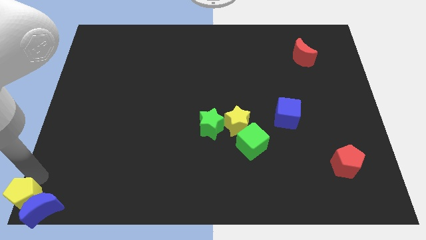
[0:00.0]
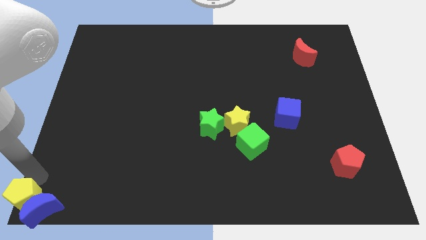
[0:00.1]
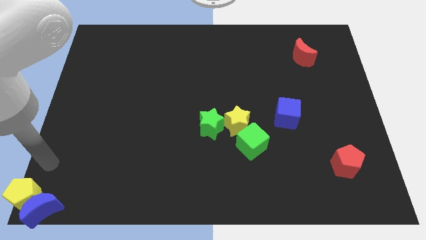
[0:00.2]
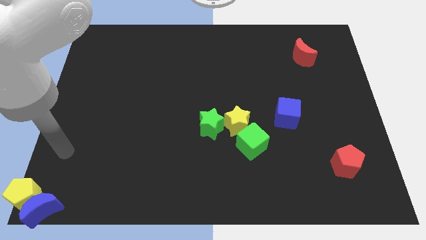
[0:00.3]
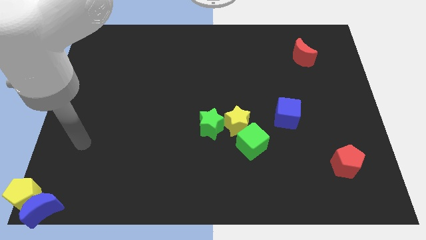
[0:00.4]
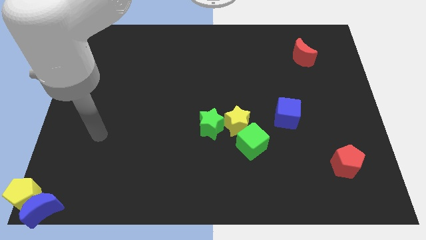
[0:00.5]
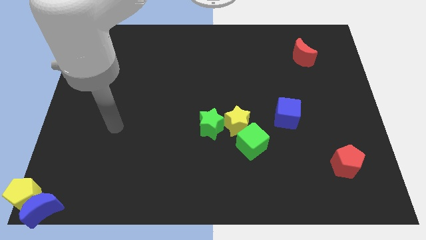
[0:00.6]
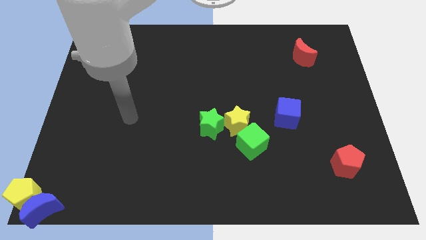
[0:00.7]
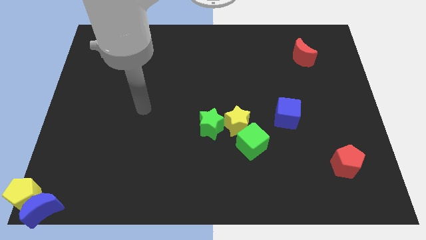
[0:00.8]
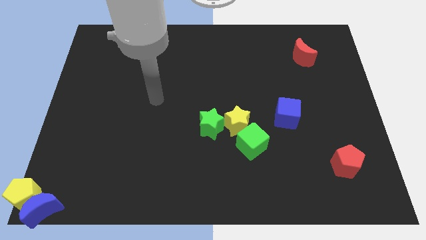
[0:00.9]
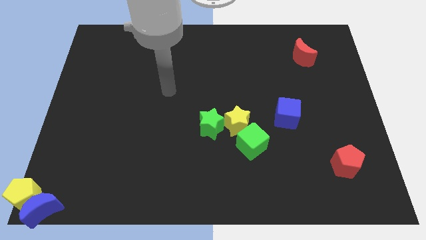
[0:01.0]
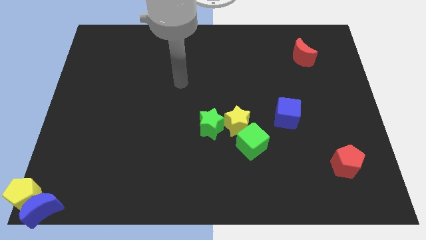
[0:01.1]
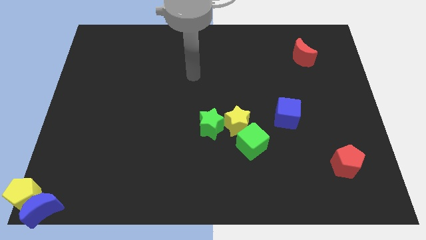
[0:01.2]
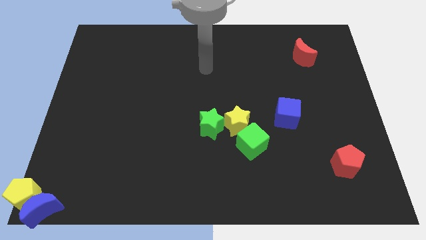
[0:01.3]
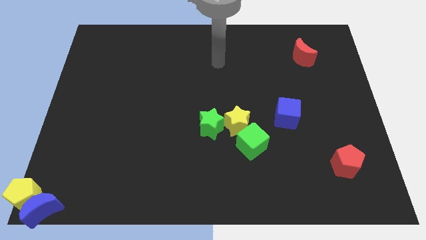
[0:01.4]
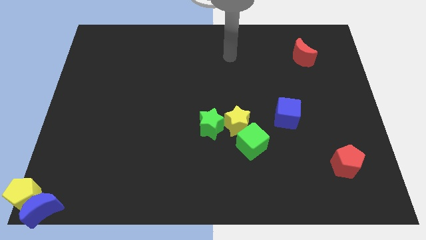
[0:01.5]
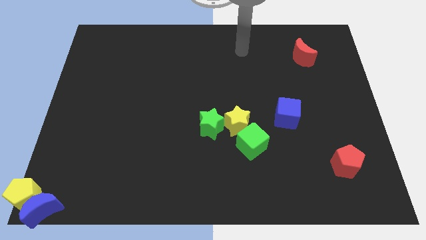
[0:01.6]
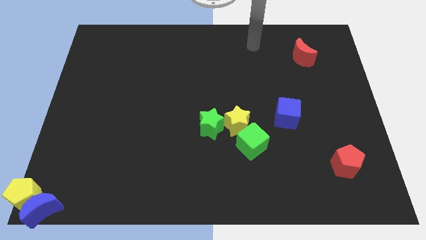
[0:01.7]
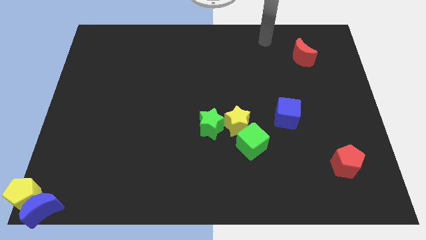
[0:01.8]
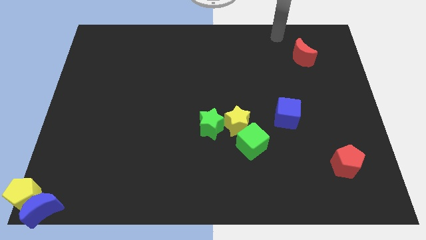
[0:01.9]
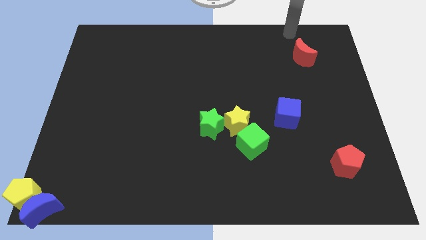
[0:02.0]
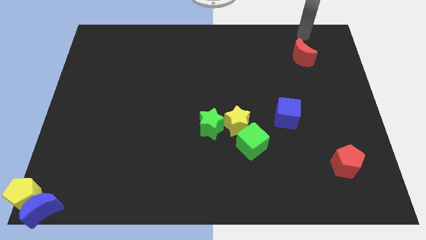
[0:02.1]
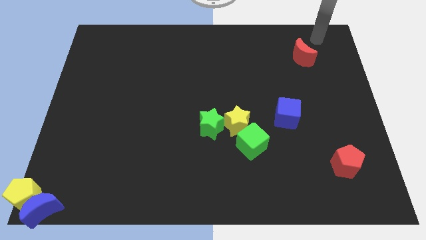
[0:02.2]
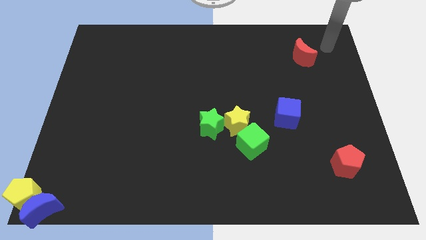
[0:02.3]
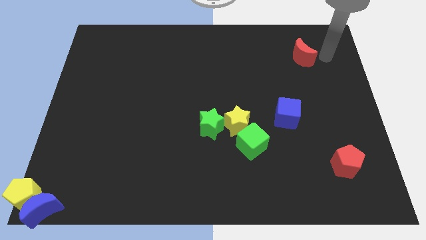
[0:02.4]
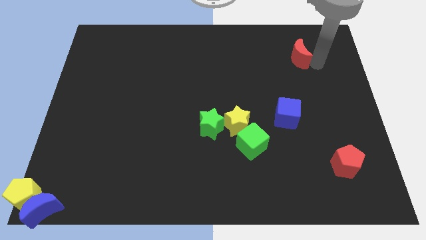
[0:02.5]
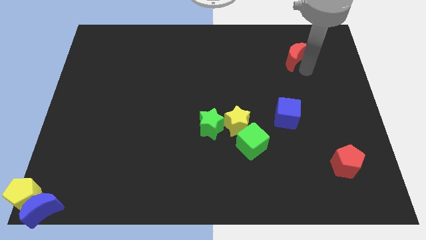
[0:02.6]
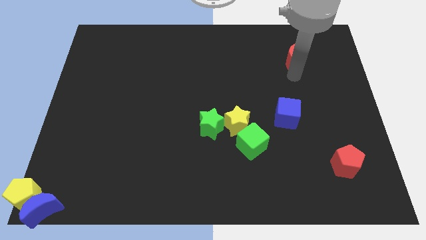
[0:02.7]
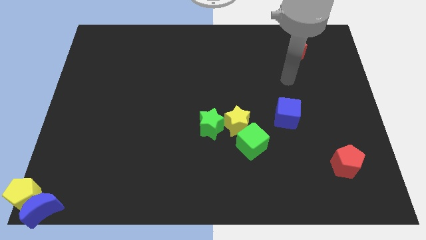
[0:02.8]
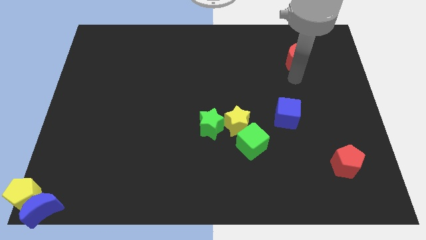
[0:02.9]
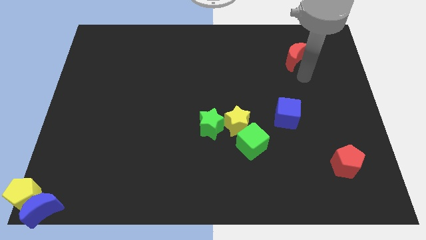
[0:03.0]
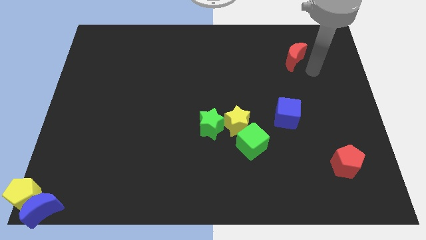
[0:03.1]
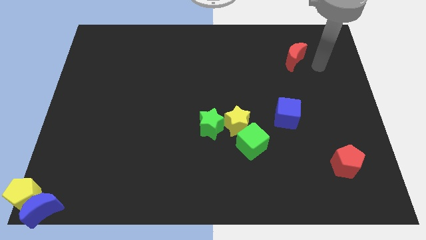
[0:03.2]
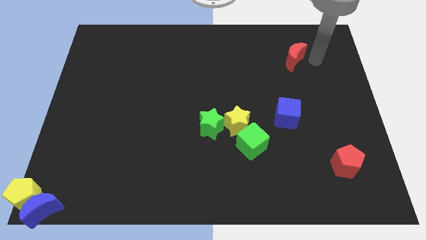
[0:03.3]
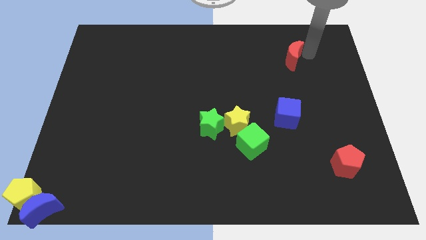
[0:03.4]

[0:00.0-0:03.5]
move the red crescent vertically at the top of the blue cube

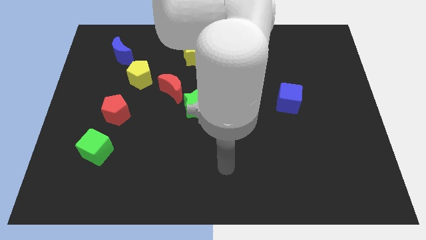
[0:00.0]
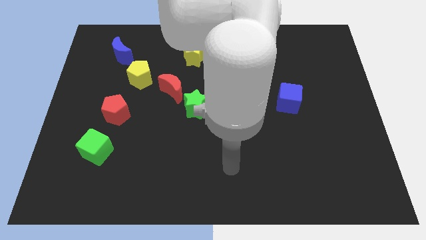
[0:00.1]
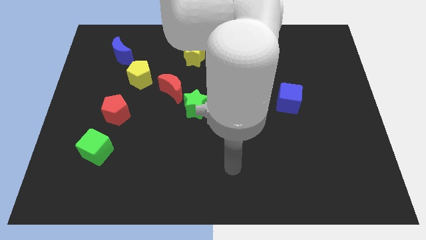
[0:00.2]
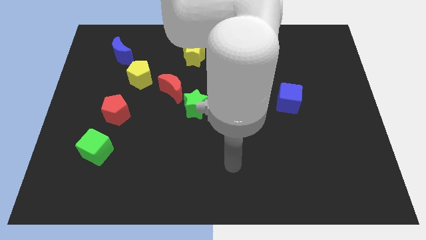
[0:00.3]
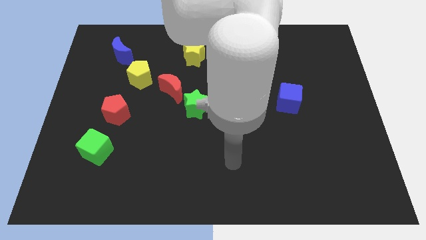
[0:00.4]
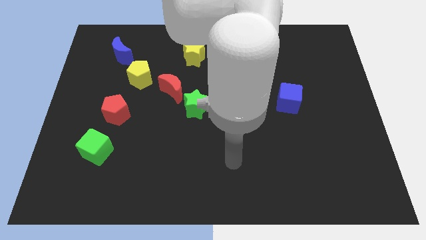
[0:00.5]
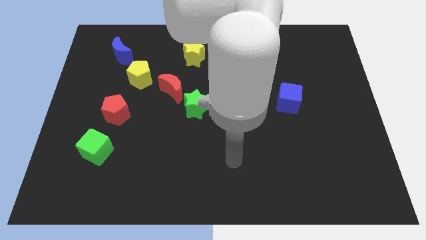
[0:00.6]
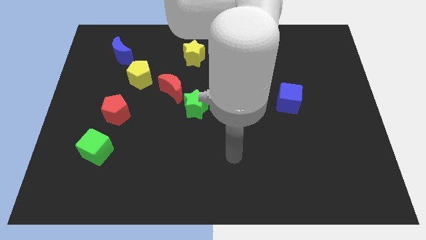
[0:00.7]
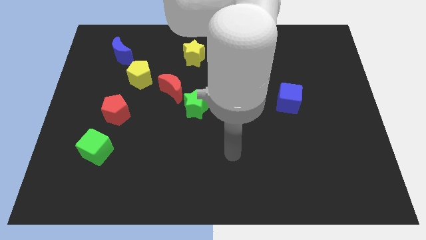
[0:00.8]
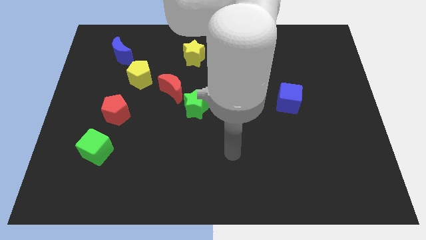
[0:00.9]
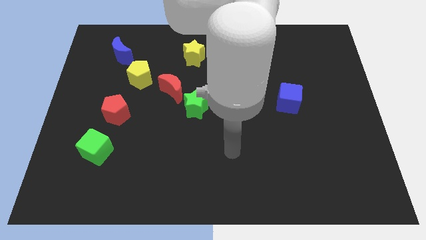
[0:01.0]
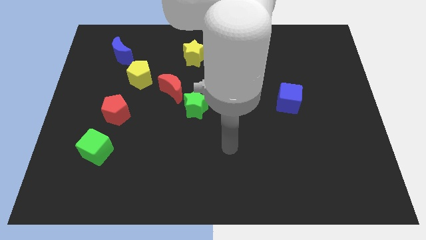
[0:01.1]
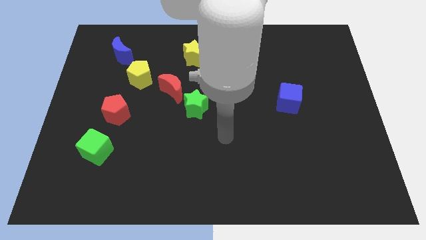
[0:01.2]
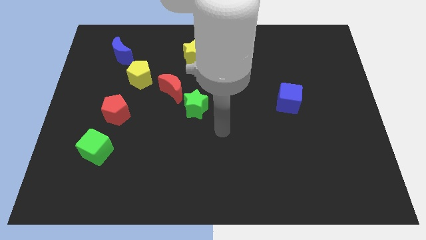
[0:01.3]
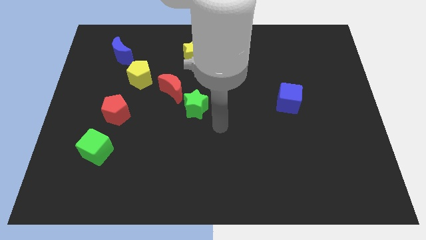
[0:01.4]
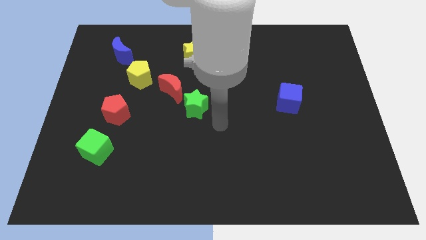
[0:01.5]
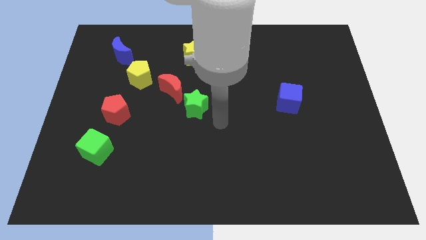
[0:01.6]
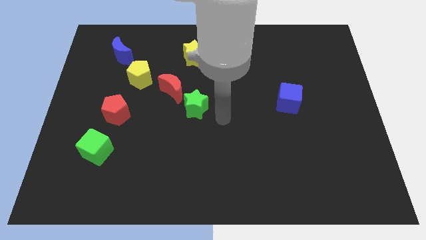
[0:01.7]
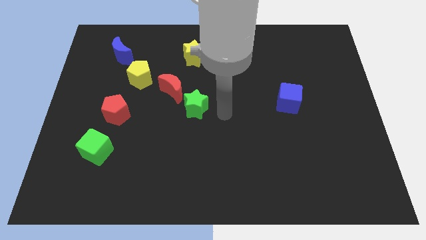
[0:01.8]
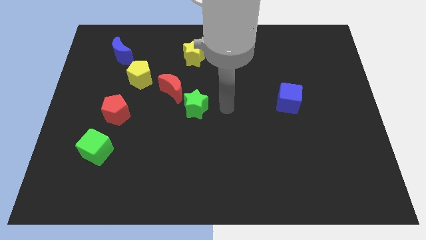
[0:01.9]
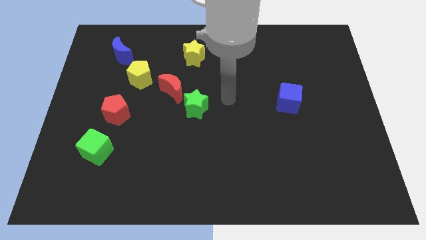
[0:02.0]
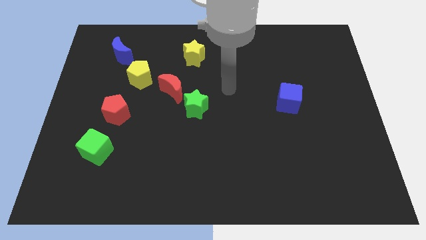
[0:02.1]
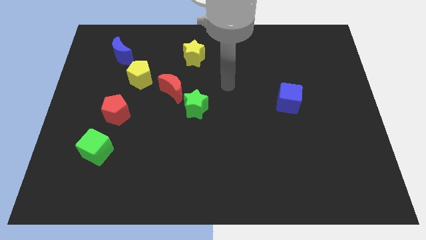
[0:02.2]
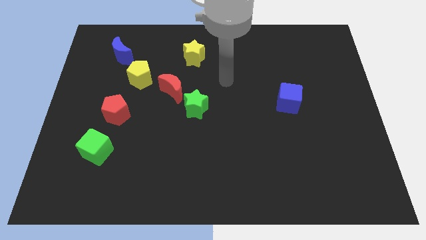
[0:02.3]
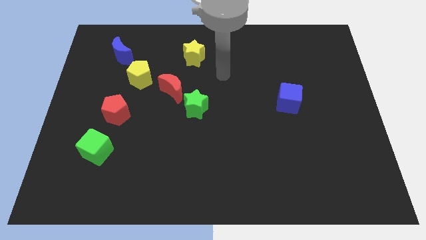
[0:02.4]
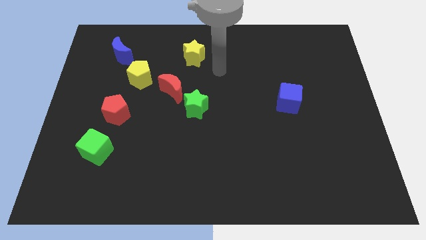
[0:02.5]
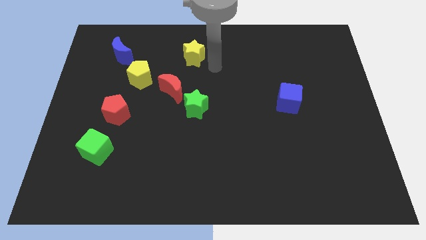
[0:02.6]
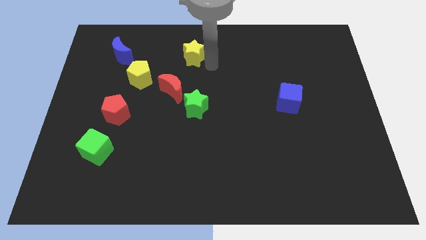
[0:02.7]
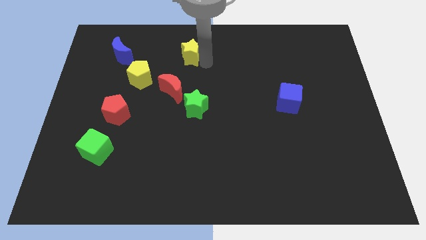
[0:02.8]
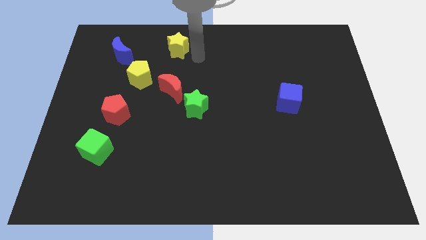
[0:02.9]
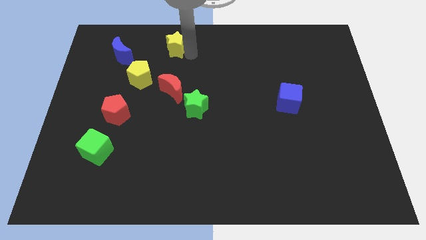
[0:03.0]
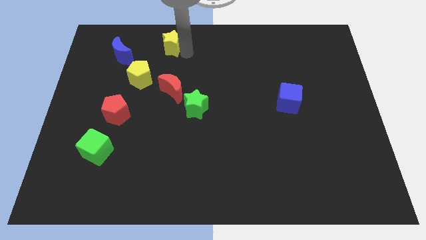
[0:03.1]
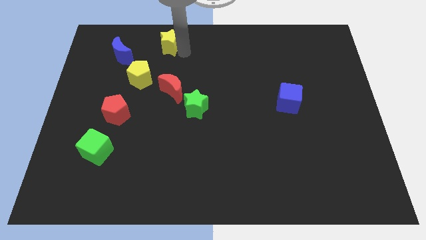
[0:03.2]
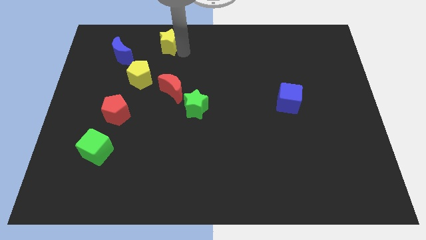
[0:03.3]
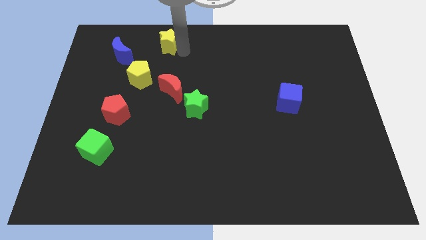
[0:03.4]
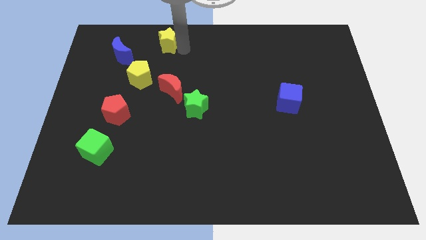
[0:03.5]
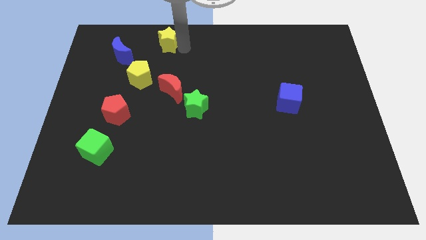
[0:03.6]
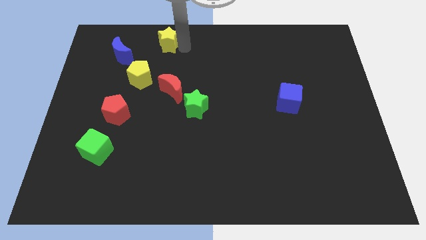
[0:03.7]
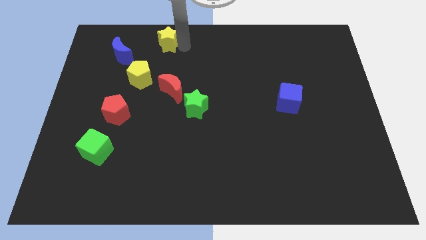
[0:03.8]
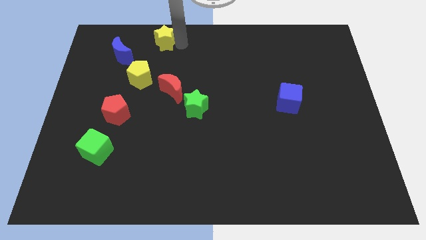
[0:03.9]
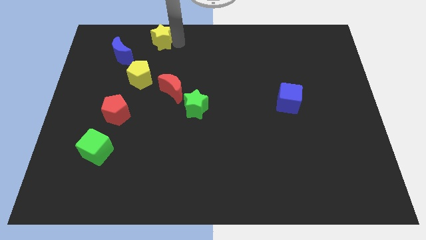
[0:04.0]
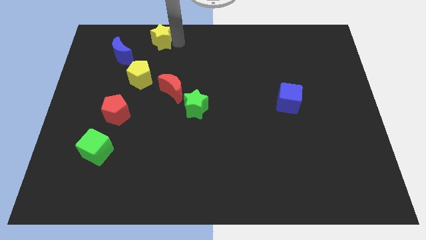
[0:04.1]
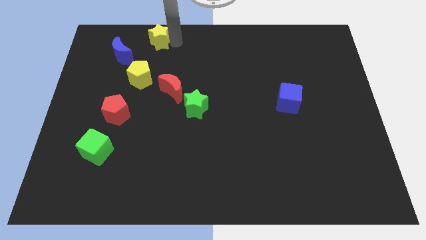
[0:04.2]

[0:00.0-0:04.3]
put the yellow star diagonally top left to the green star

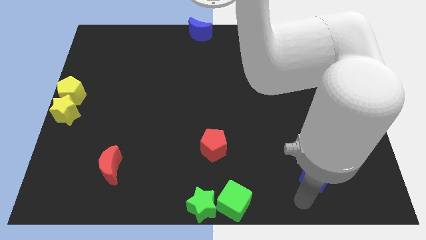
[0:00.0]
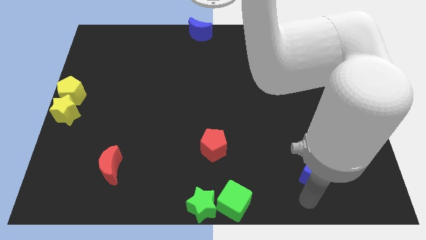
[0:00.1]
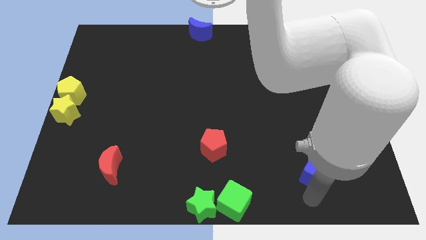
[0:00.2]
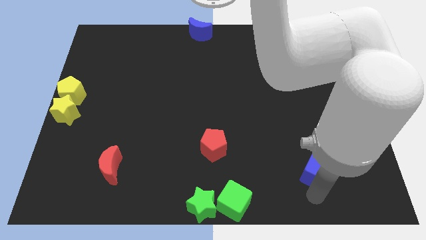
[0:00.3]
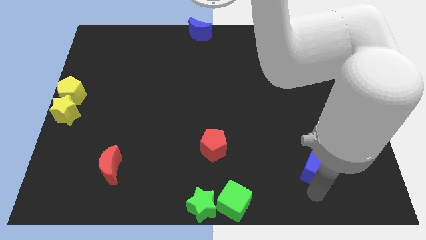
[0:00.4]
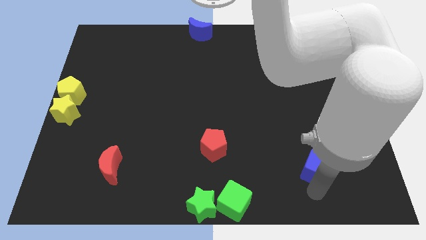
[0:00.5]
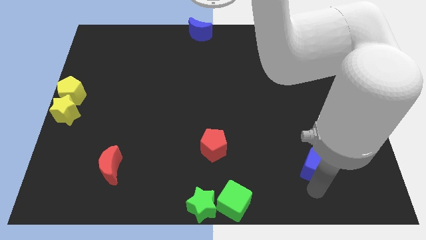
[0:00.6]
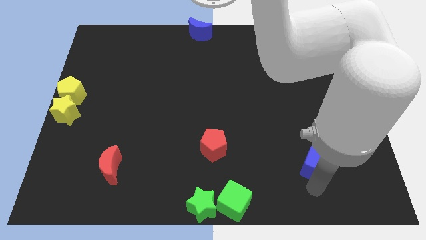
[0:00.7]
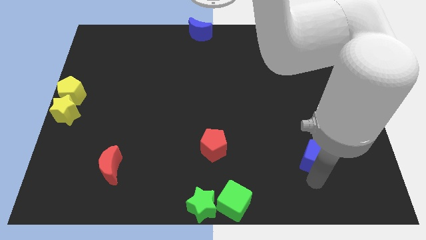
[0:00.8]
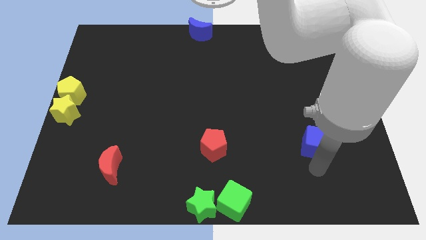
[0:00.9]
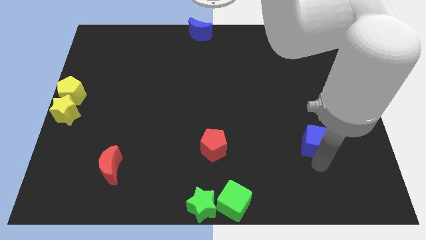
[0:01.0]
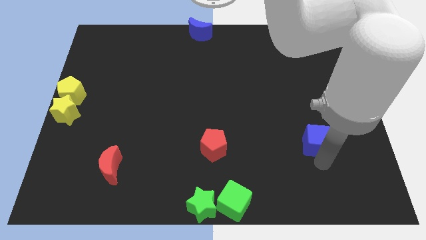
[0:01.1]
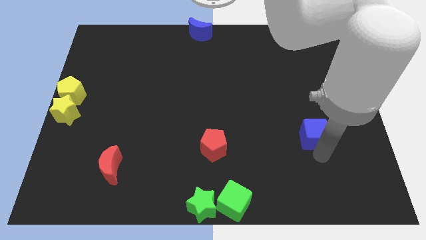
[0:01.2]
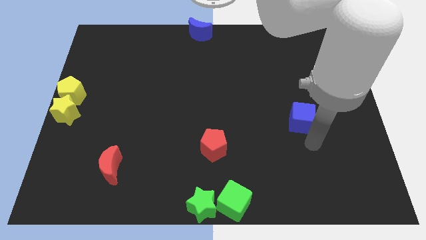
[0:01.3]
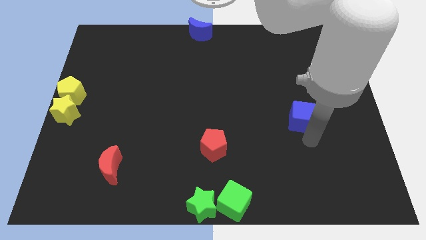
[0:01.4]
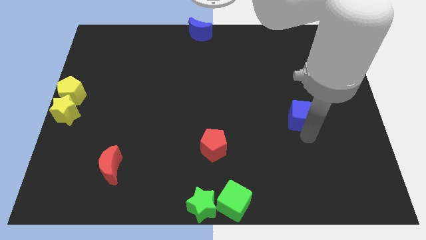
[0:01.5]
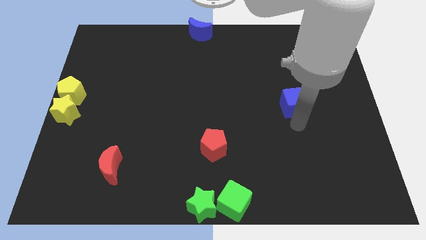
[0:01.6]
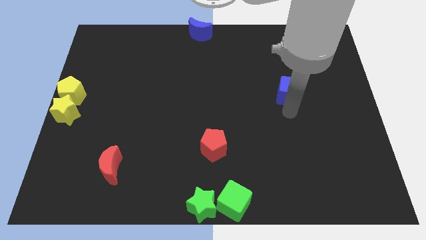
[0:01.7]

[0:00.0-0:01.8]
move the blue cube to the center
